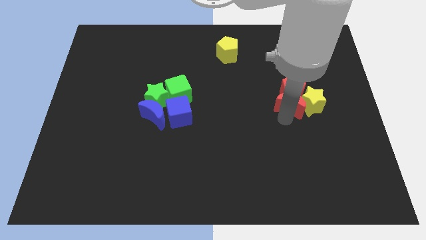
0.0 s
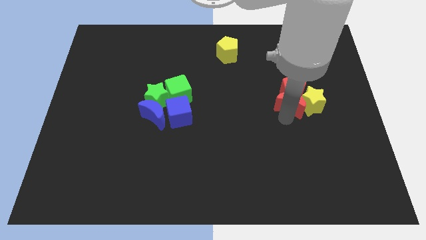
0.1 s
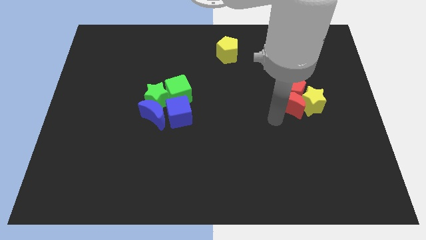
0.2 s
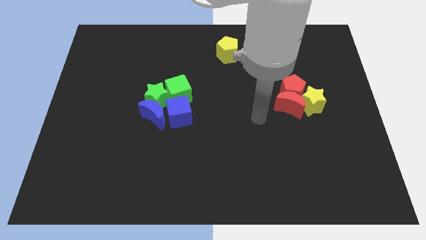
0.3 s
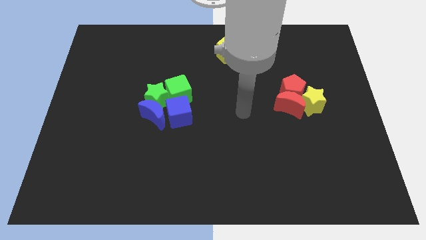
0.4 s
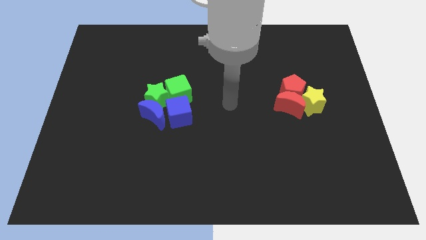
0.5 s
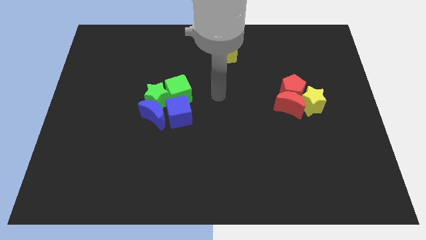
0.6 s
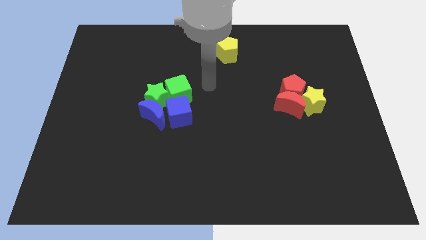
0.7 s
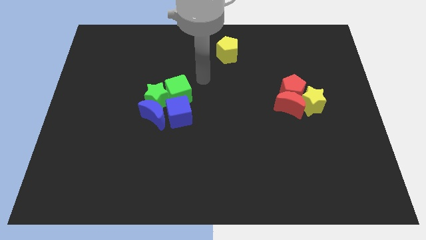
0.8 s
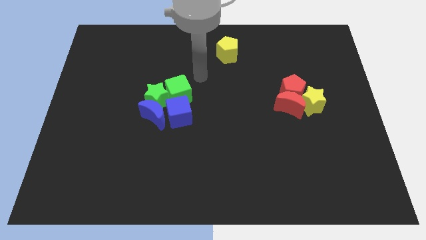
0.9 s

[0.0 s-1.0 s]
move the arm away from the red moon

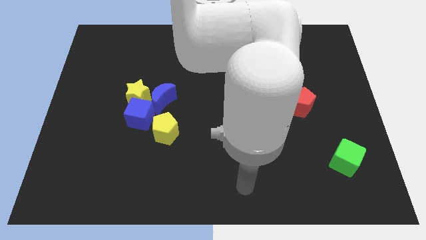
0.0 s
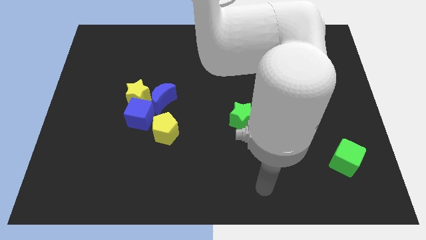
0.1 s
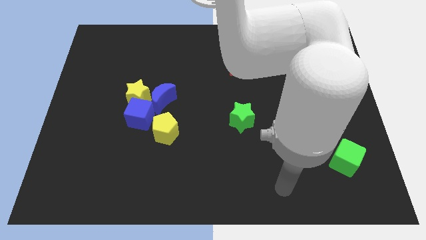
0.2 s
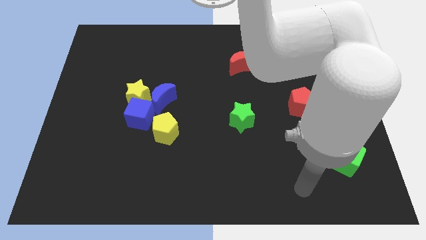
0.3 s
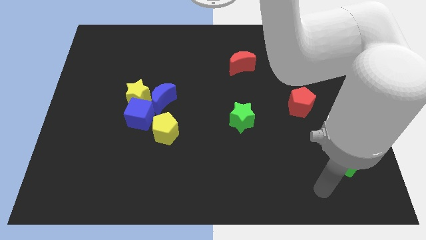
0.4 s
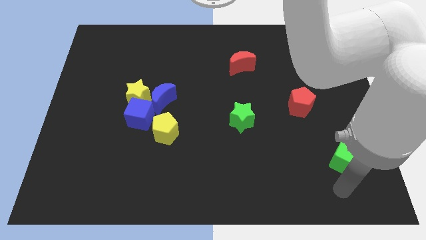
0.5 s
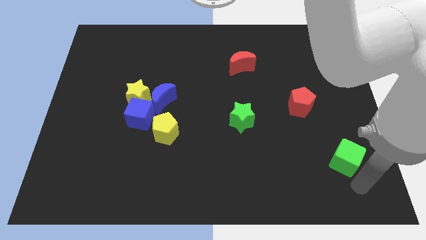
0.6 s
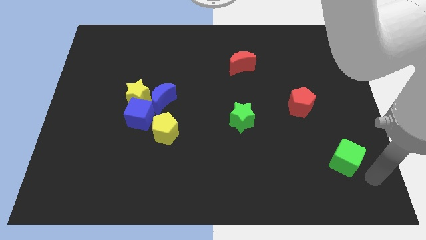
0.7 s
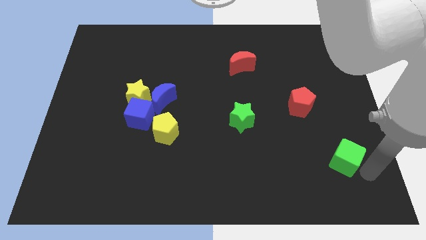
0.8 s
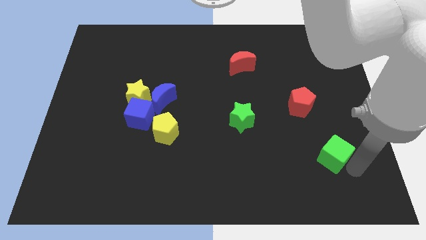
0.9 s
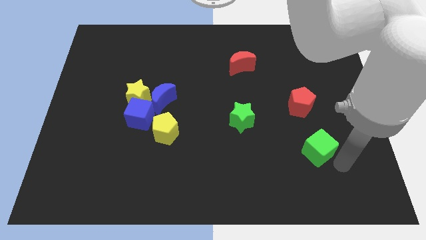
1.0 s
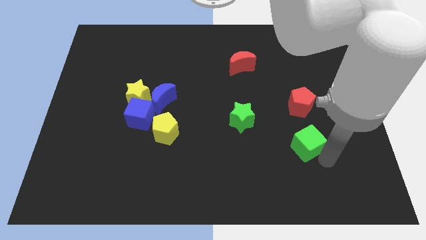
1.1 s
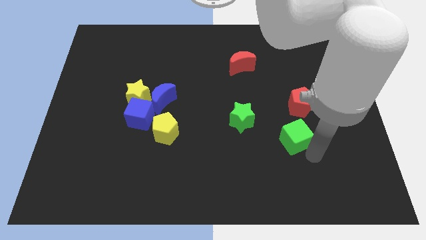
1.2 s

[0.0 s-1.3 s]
place green cube to the bottom of red pentagon

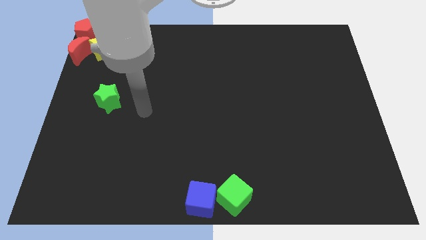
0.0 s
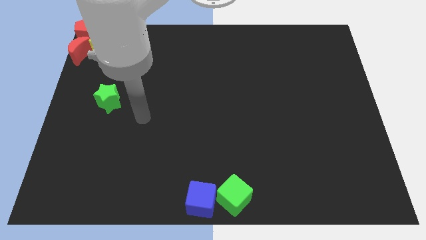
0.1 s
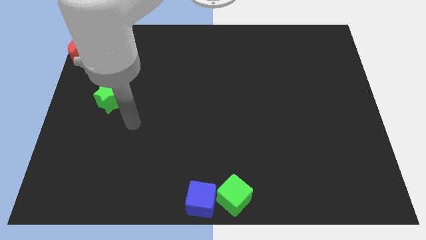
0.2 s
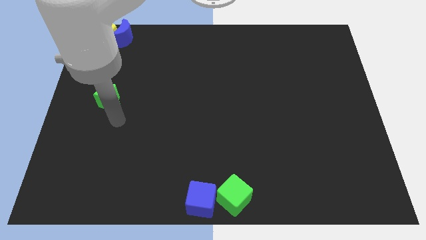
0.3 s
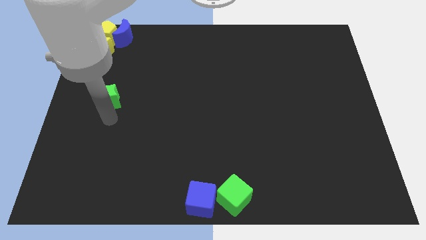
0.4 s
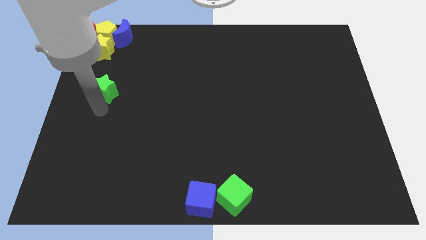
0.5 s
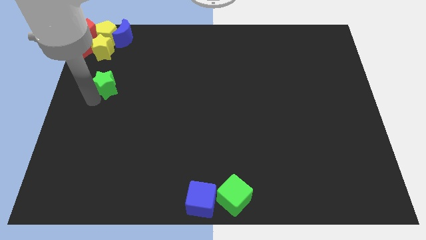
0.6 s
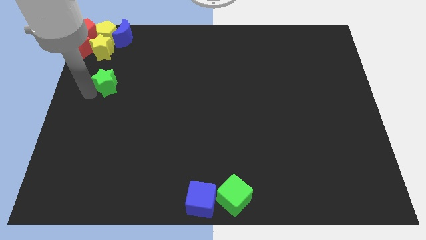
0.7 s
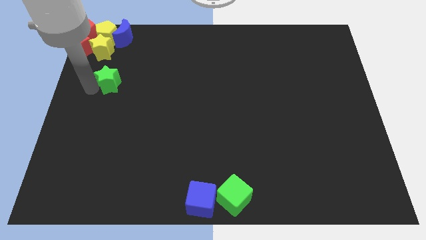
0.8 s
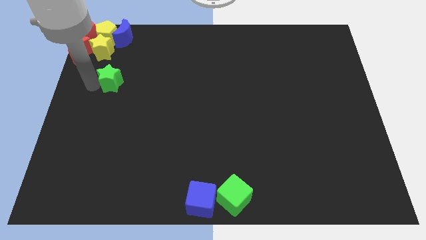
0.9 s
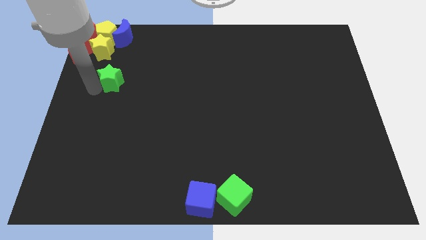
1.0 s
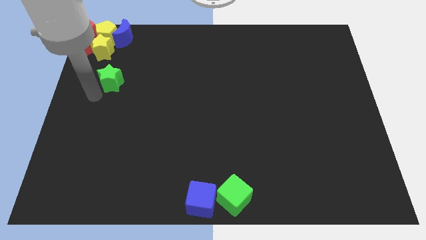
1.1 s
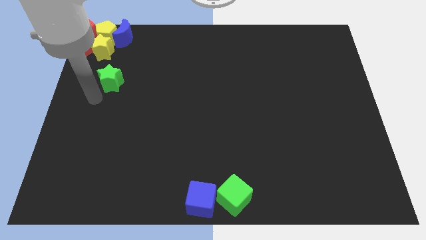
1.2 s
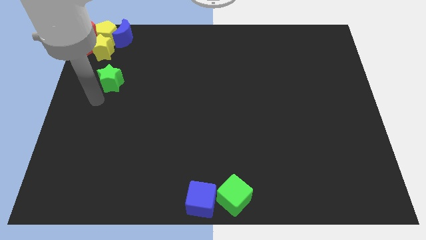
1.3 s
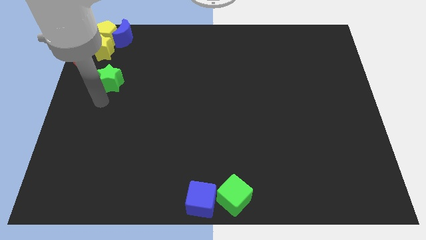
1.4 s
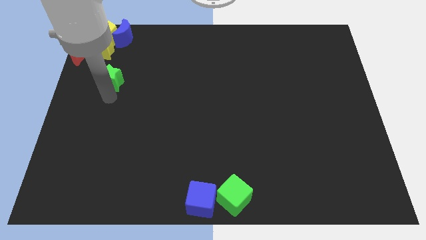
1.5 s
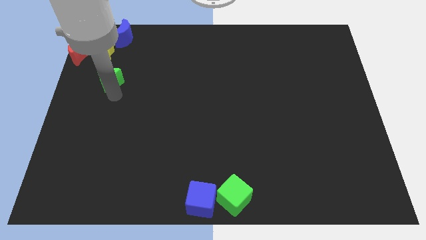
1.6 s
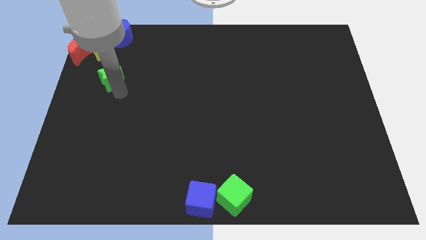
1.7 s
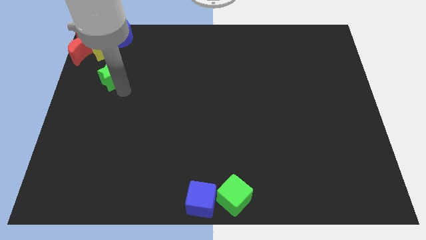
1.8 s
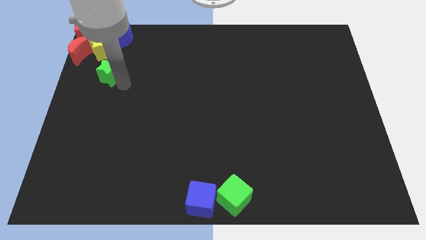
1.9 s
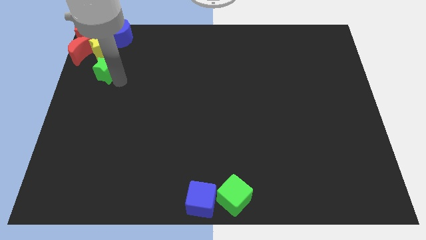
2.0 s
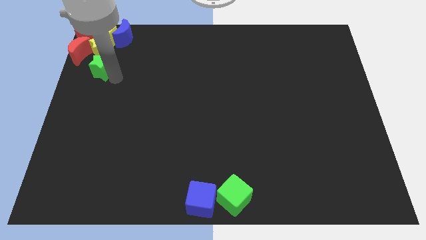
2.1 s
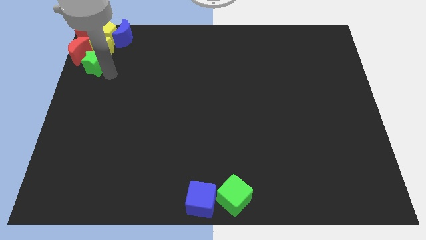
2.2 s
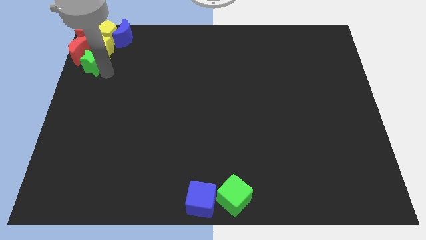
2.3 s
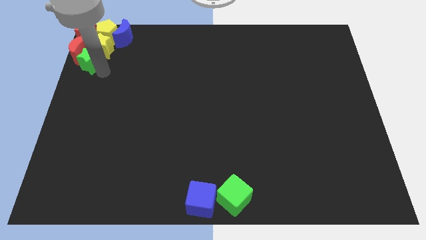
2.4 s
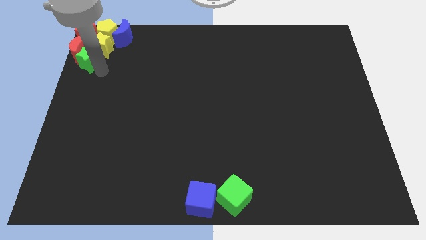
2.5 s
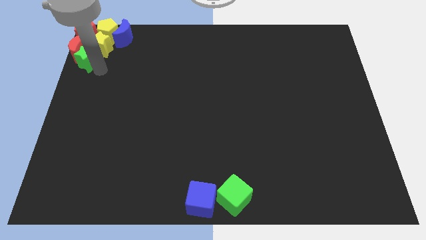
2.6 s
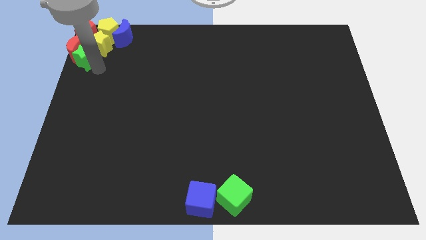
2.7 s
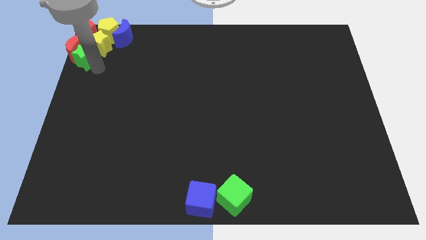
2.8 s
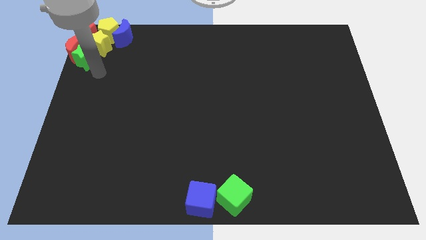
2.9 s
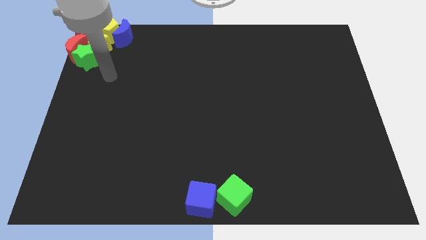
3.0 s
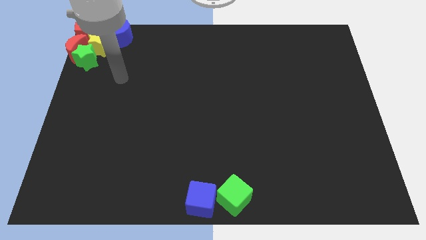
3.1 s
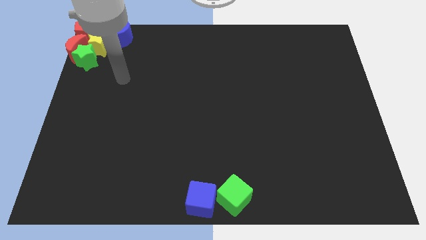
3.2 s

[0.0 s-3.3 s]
push the green star into the group of blocks

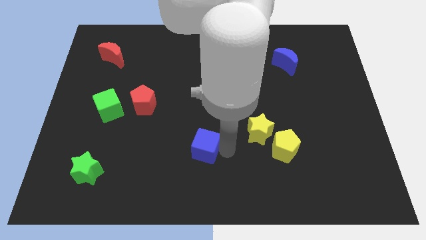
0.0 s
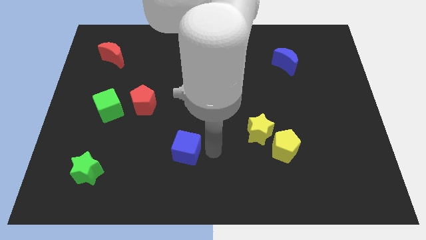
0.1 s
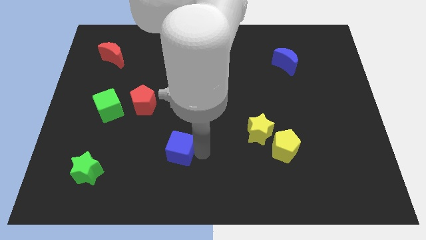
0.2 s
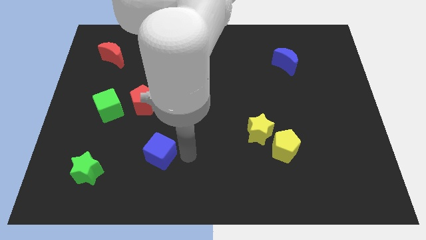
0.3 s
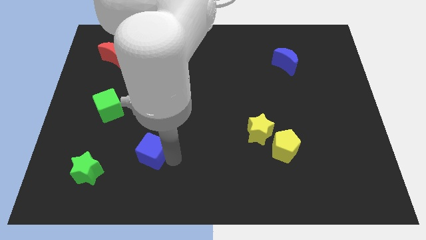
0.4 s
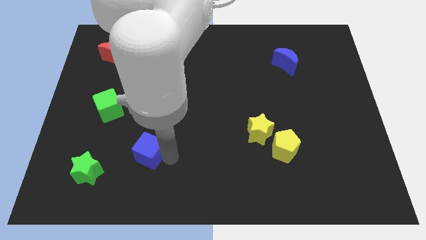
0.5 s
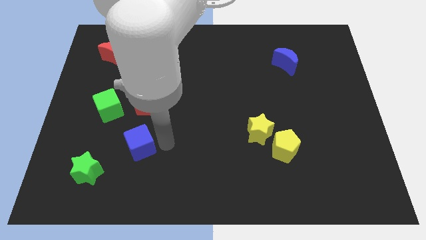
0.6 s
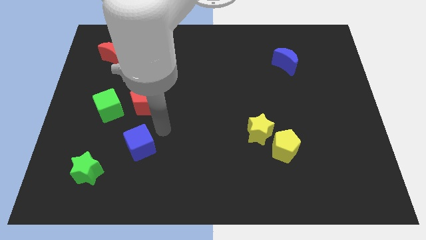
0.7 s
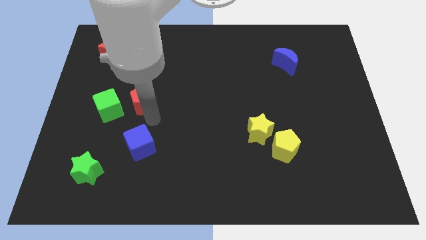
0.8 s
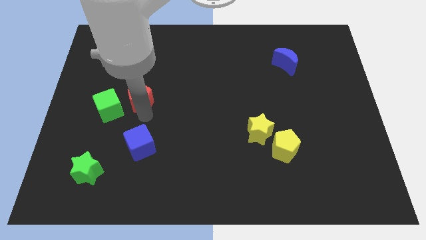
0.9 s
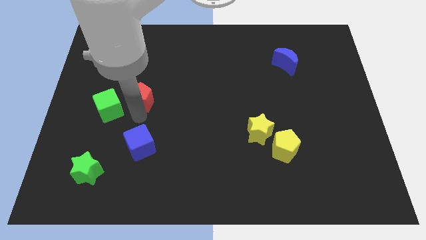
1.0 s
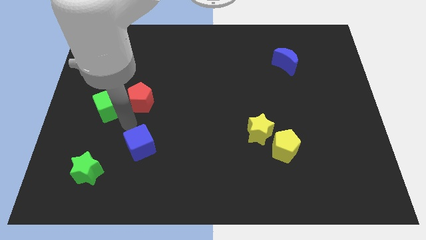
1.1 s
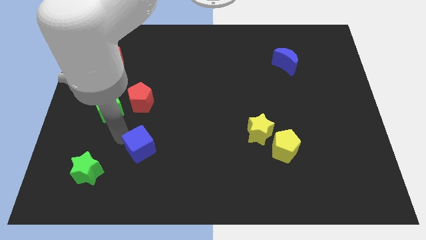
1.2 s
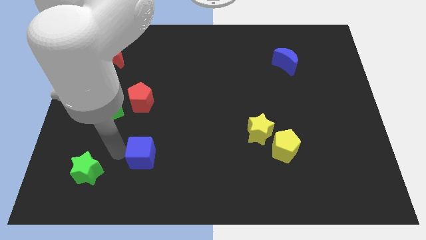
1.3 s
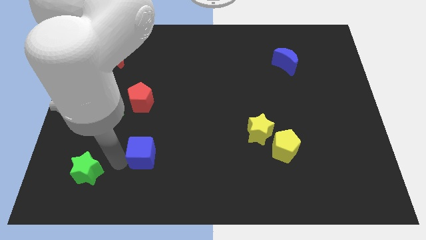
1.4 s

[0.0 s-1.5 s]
put the blue cube vertically below the red pentagon

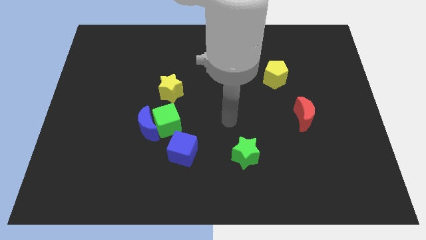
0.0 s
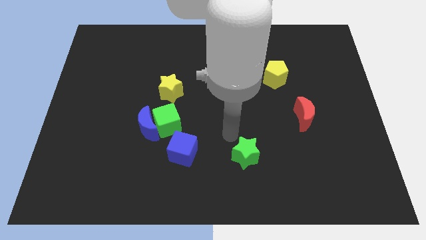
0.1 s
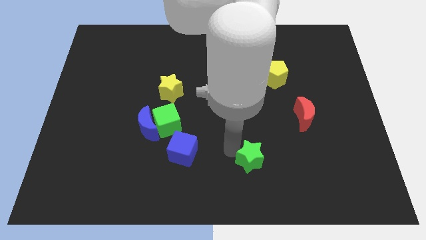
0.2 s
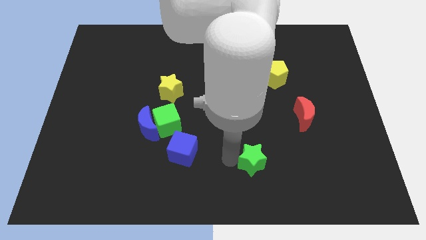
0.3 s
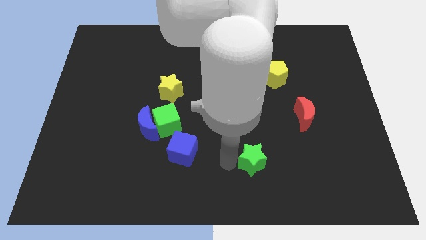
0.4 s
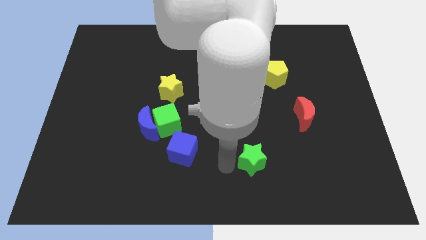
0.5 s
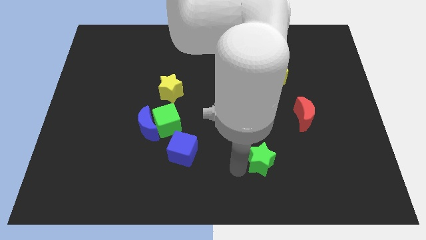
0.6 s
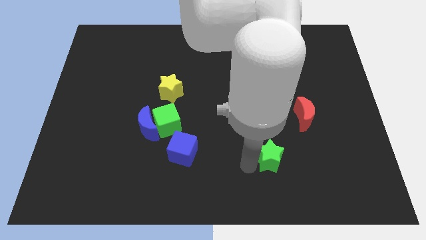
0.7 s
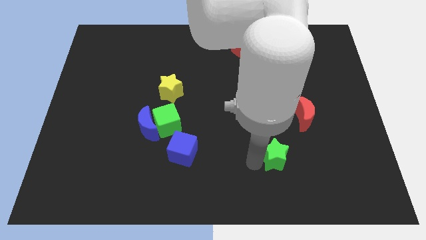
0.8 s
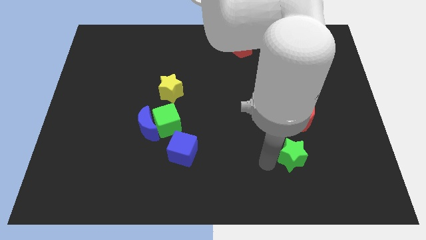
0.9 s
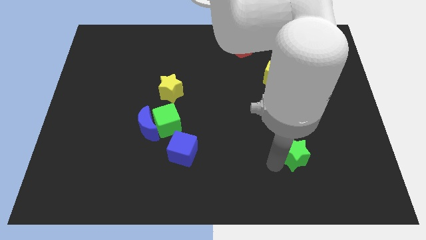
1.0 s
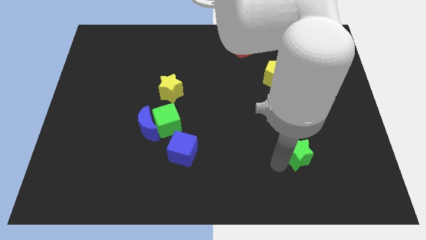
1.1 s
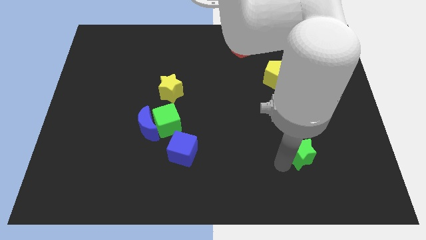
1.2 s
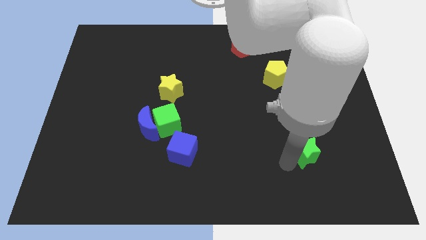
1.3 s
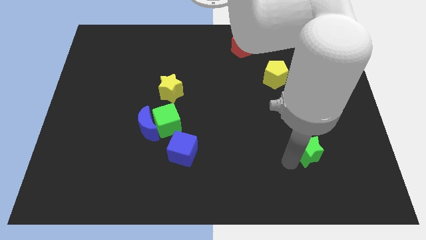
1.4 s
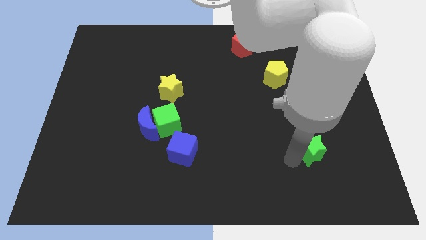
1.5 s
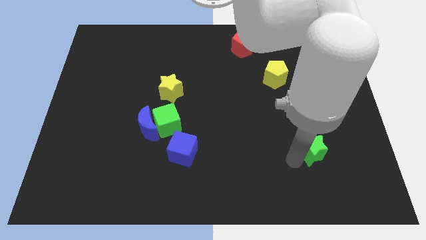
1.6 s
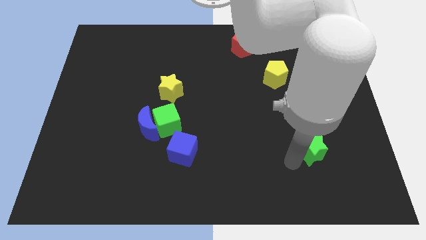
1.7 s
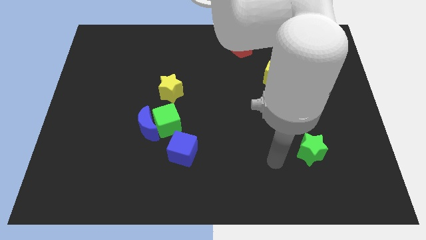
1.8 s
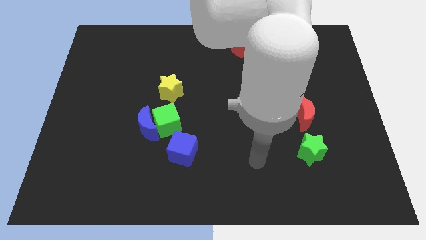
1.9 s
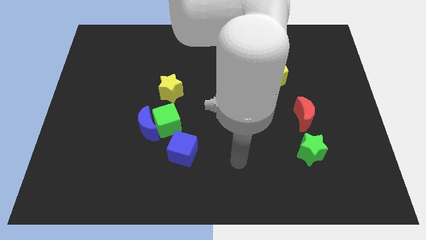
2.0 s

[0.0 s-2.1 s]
place green star below red moon
